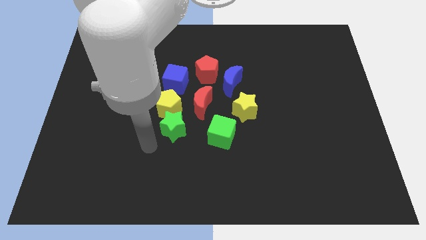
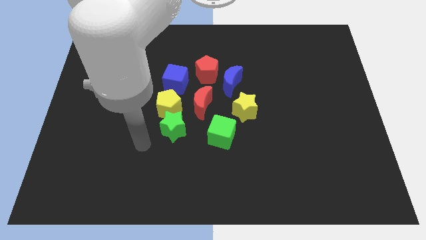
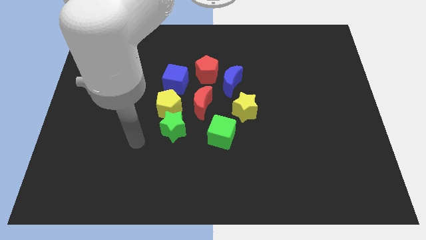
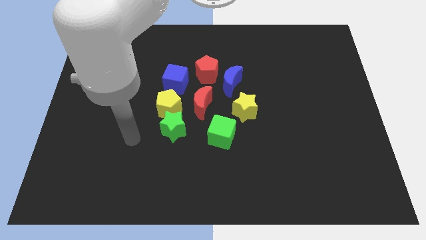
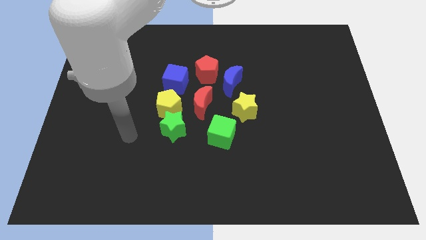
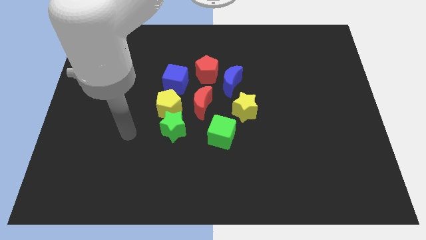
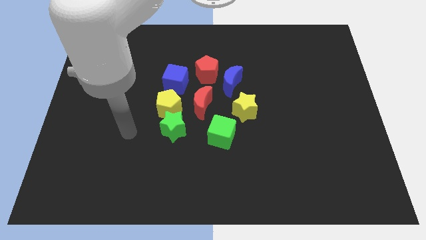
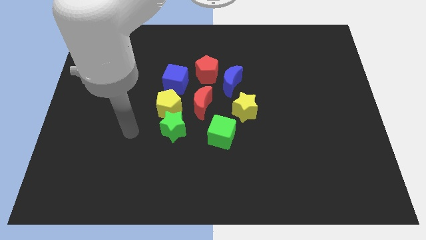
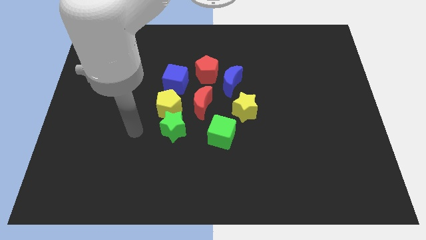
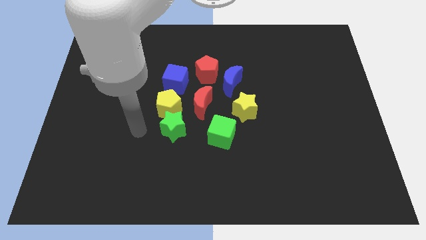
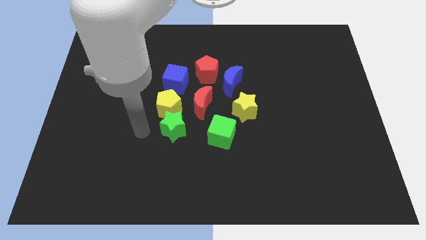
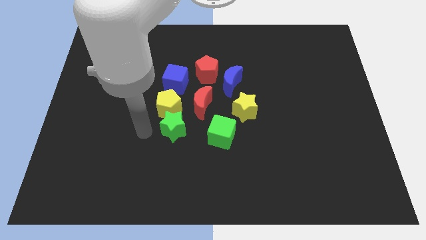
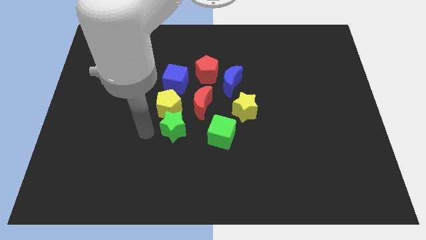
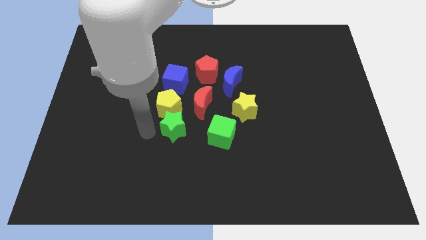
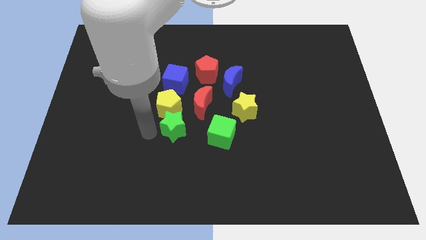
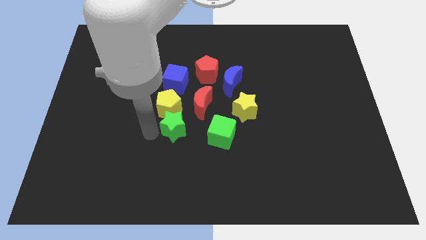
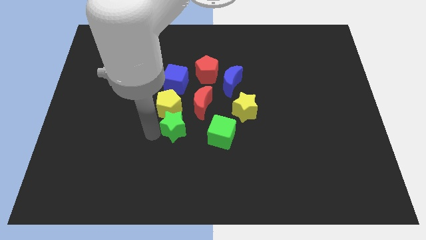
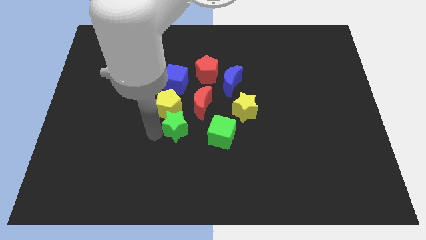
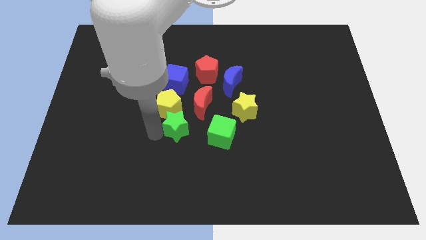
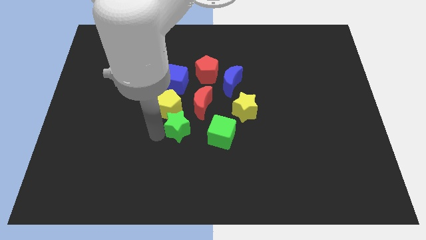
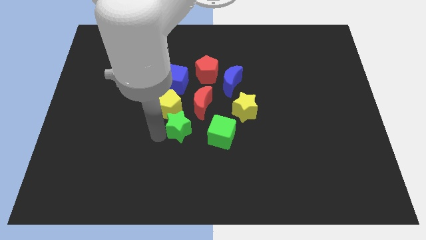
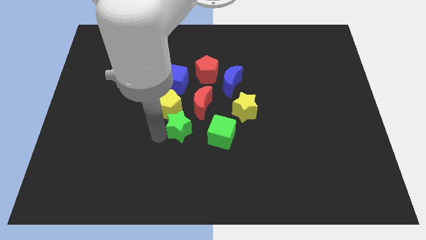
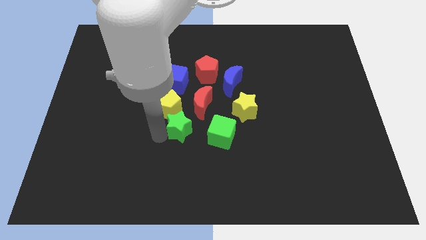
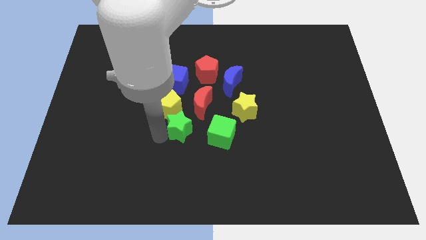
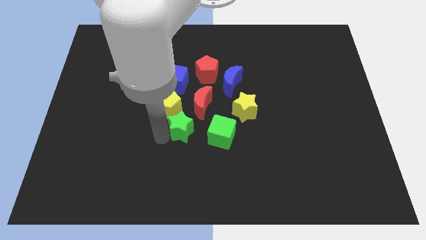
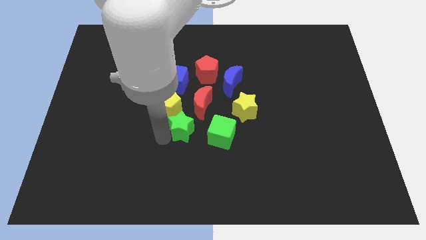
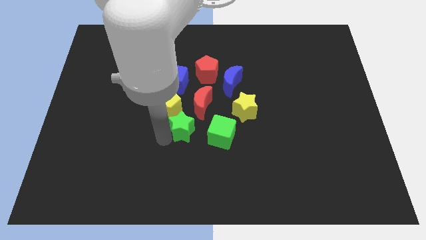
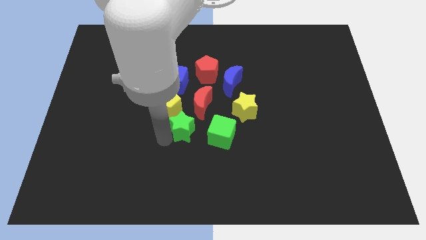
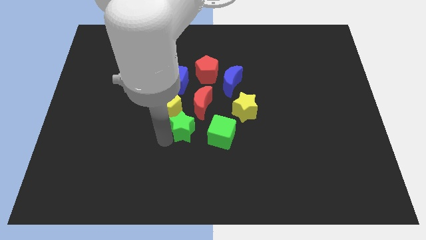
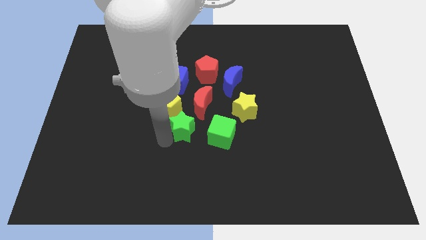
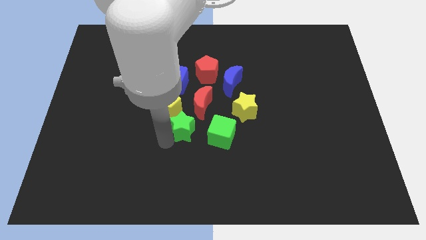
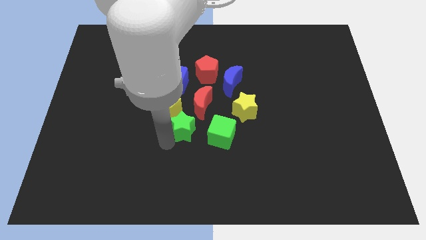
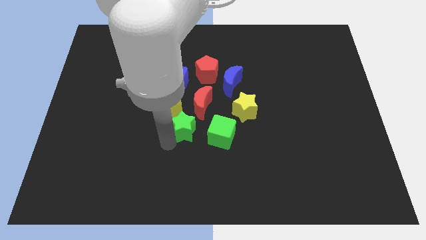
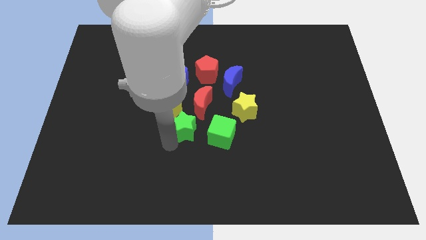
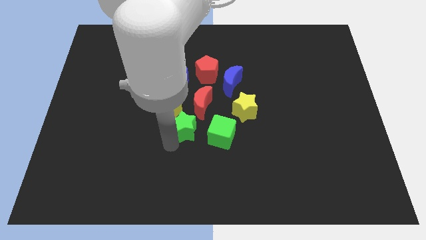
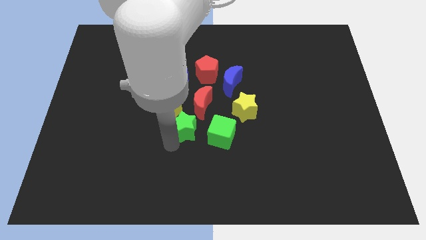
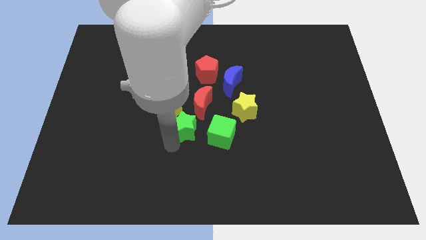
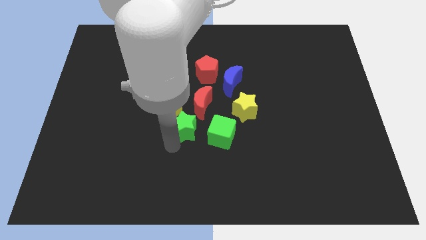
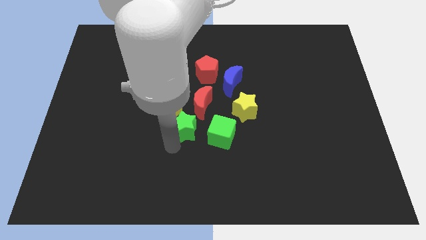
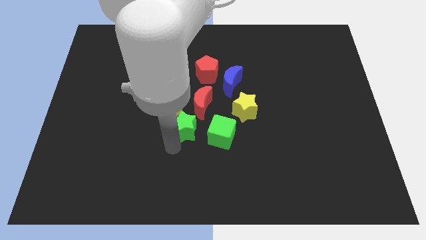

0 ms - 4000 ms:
push the green star towards the green cube

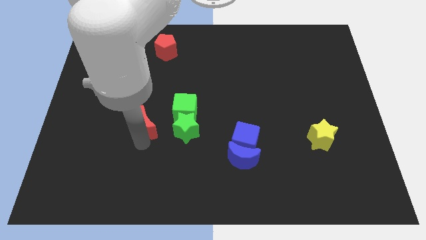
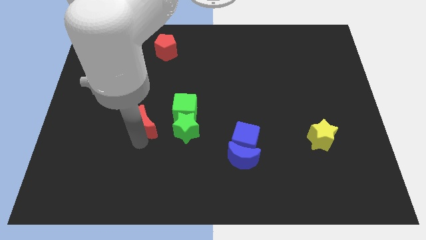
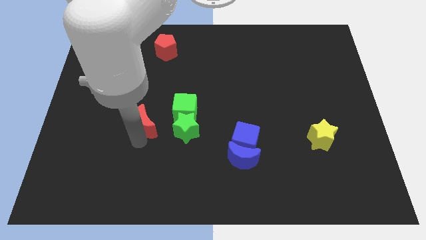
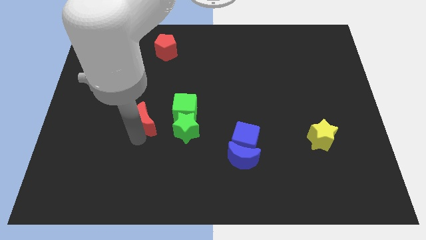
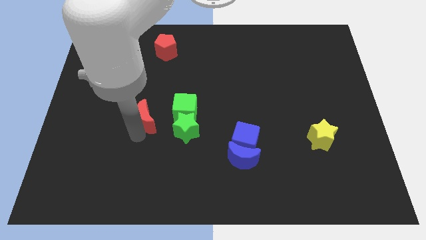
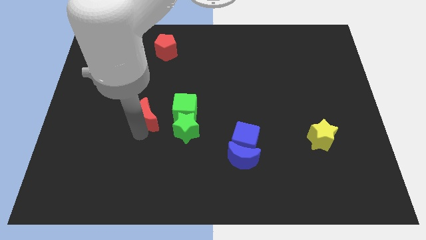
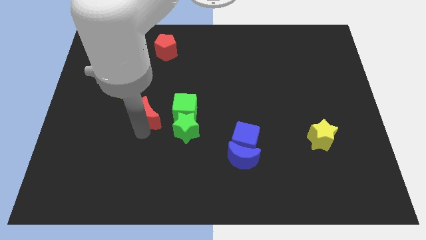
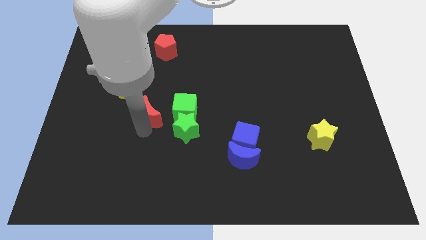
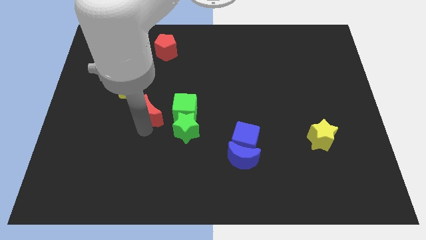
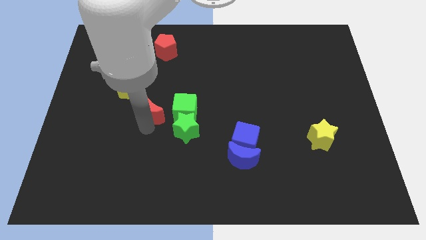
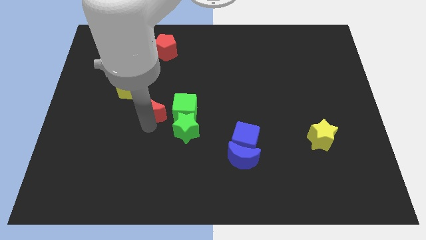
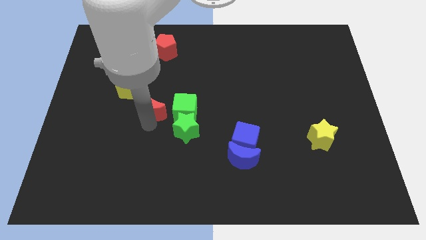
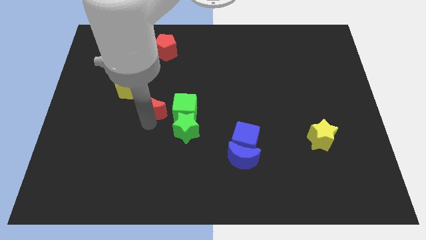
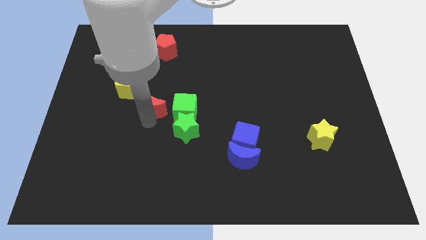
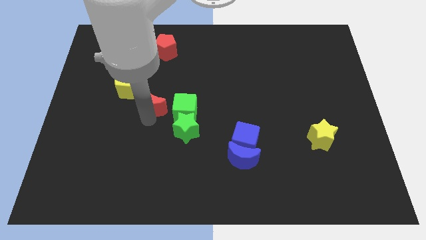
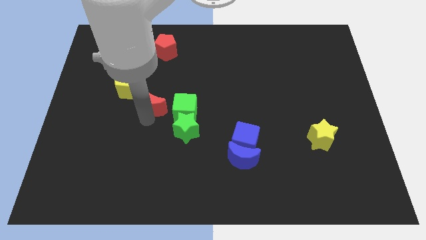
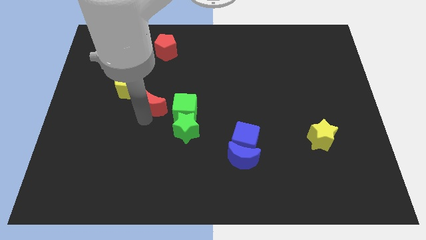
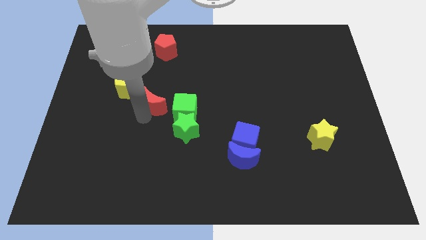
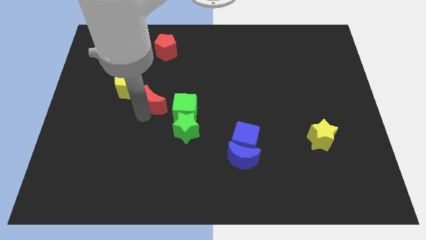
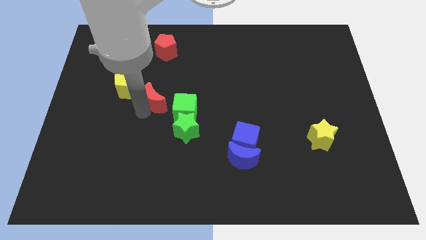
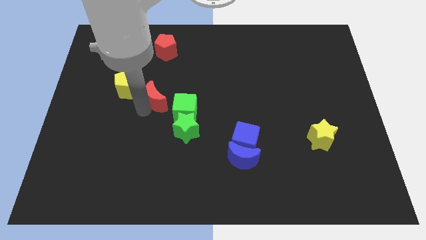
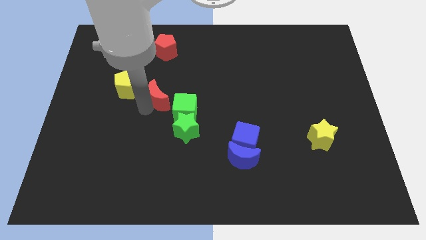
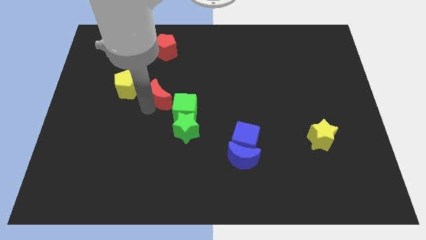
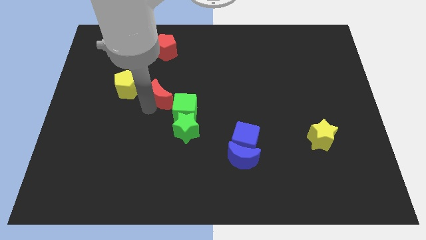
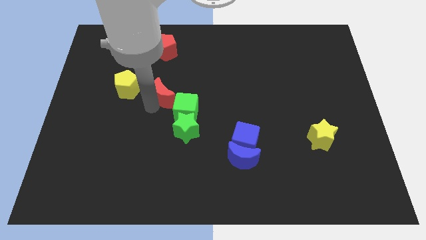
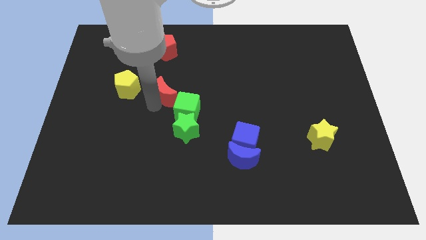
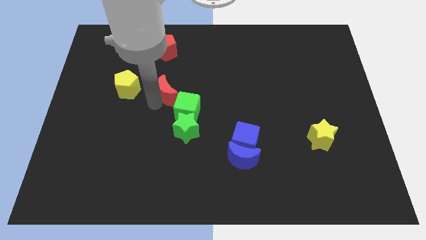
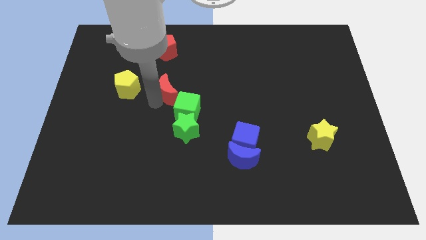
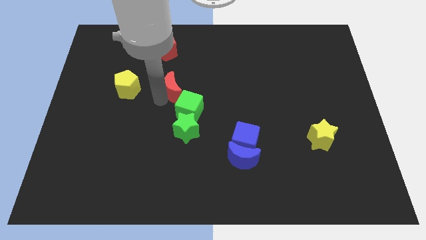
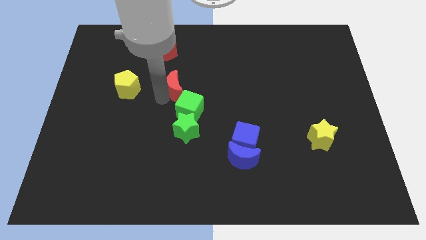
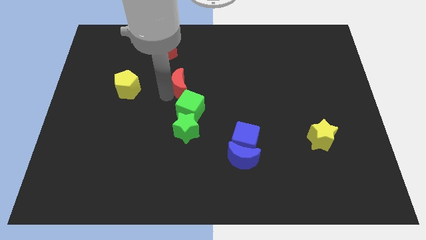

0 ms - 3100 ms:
drag the red crescent to the top left of the green cube

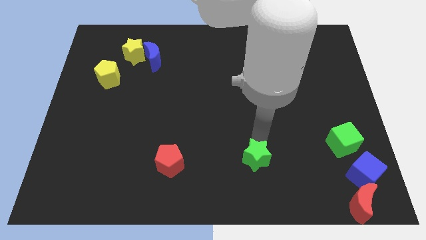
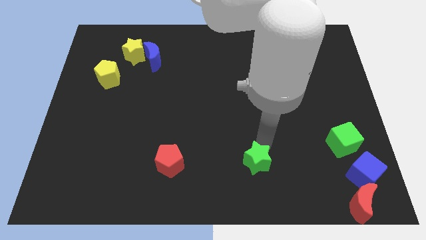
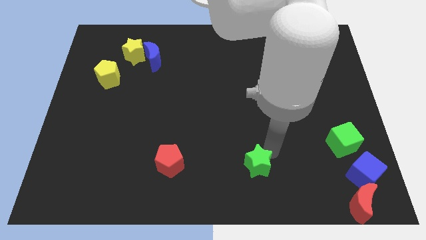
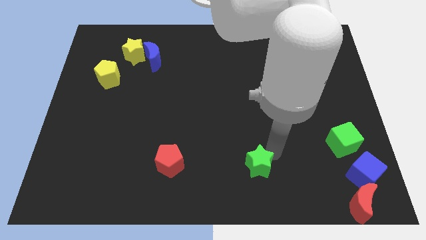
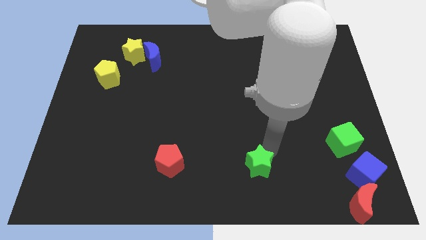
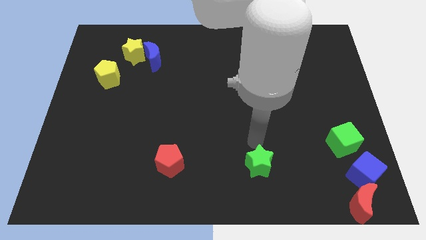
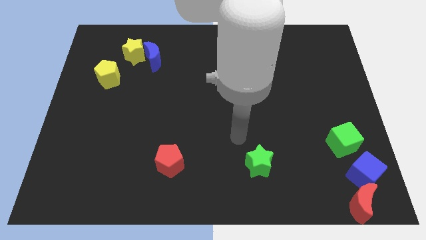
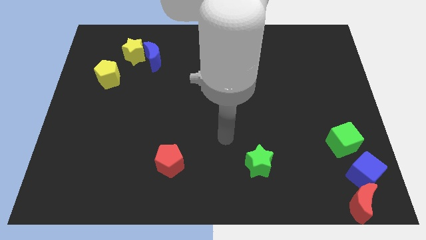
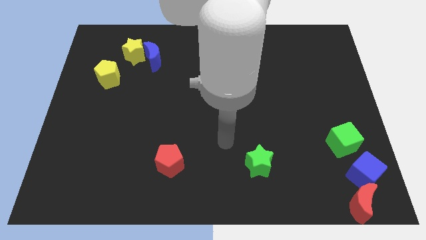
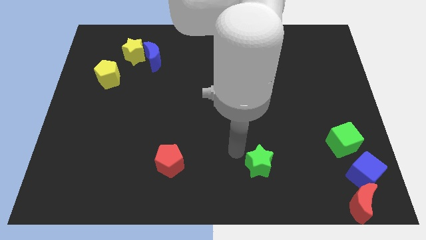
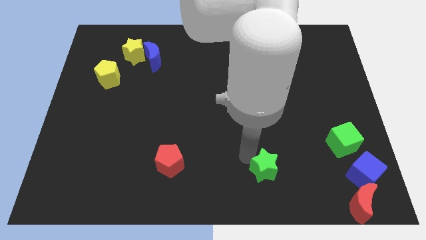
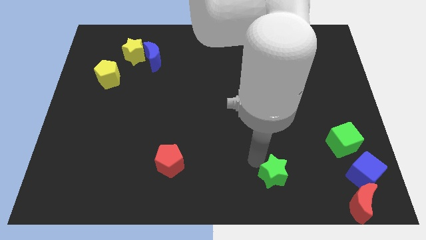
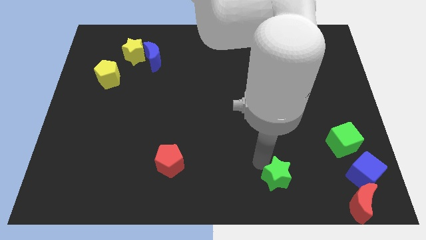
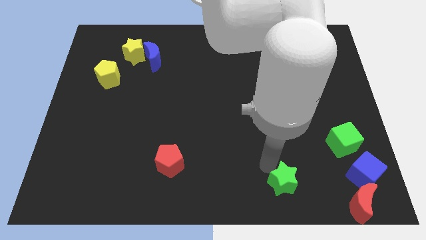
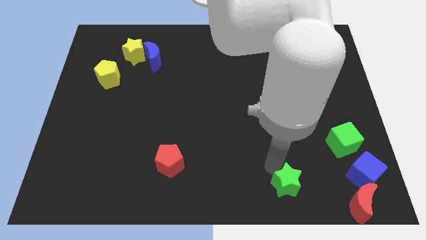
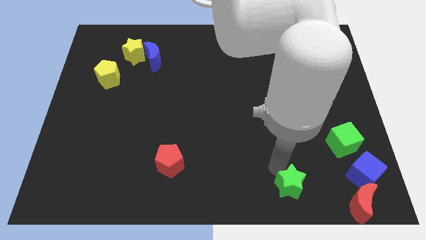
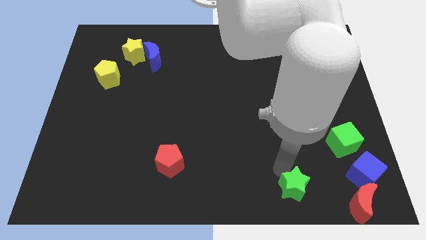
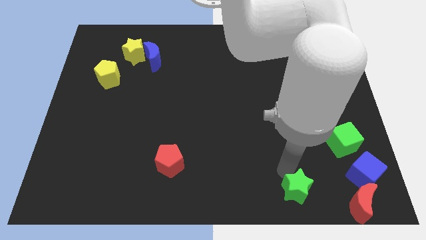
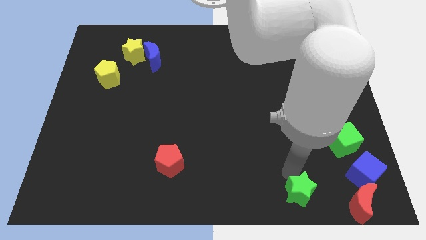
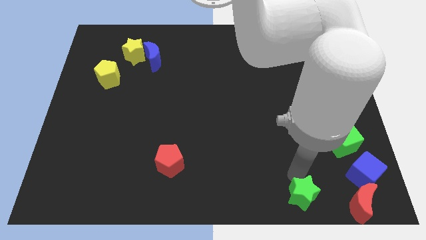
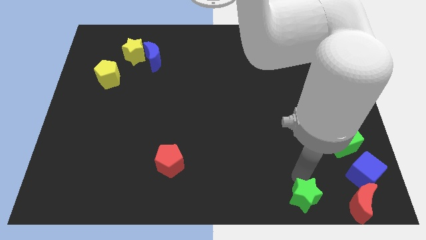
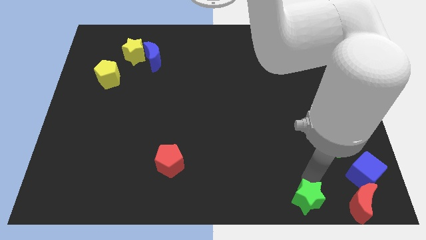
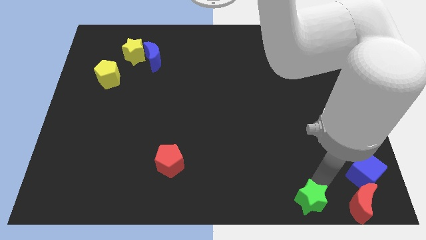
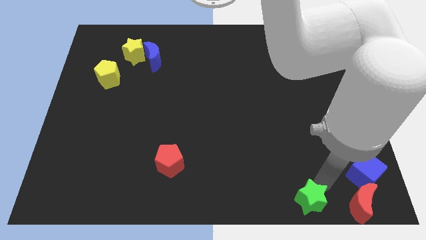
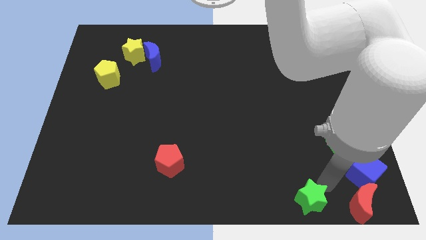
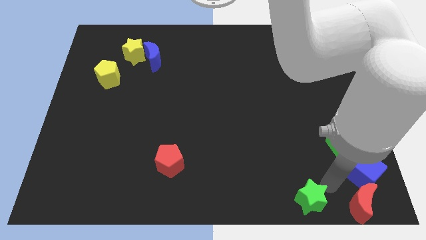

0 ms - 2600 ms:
slide the green star to the left of the red crescent
